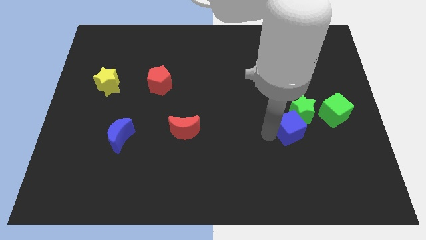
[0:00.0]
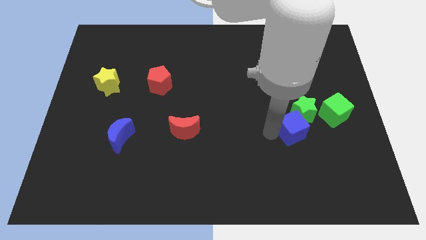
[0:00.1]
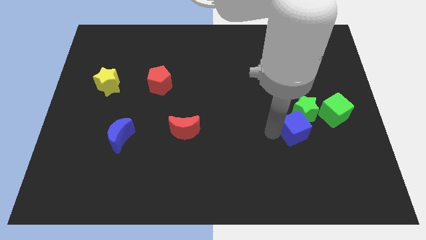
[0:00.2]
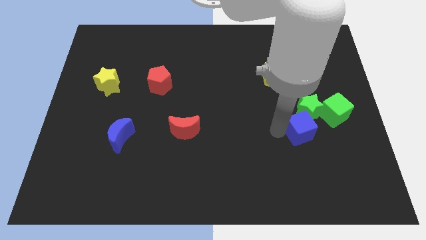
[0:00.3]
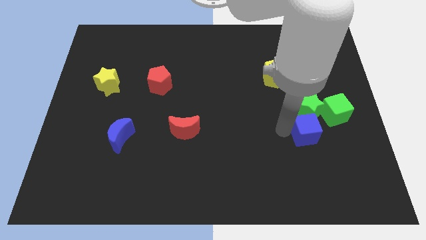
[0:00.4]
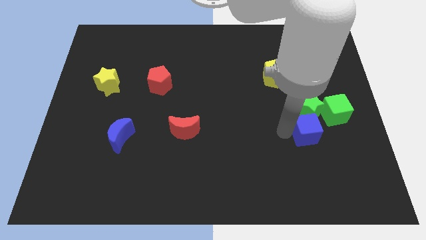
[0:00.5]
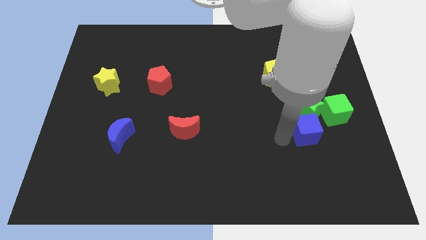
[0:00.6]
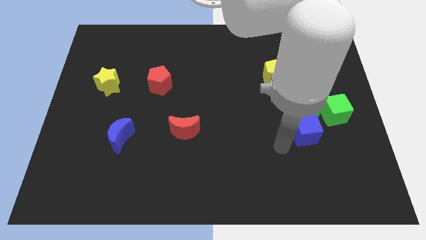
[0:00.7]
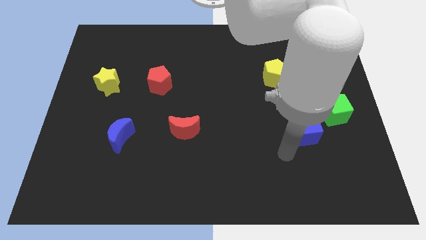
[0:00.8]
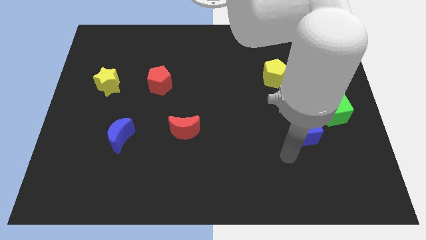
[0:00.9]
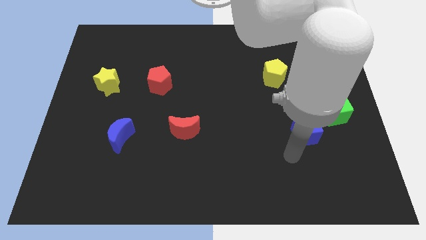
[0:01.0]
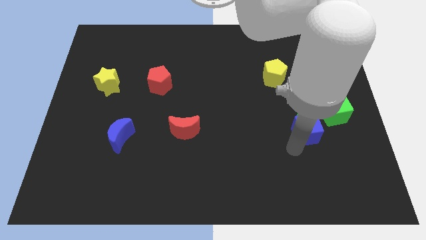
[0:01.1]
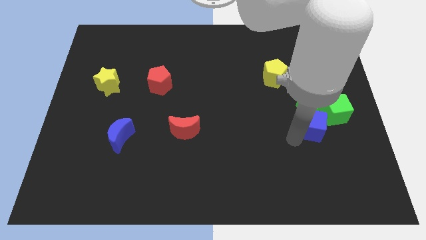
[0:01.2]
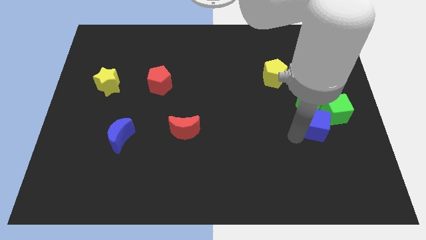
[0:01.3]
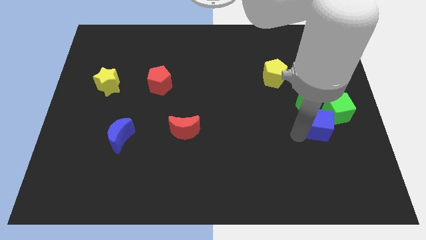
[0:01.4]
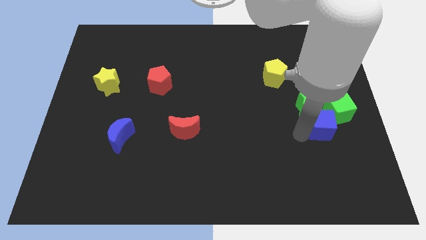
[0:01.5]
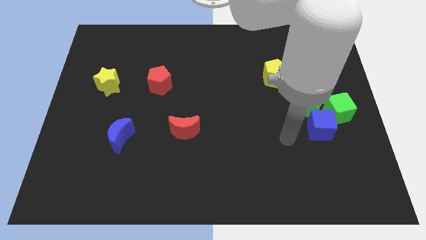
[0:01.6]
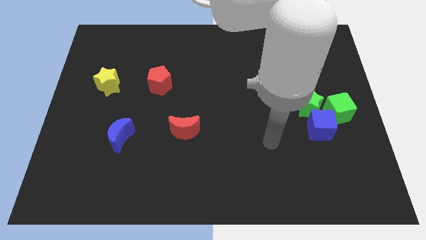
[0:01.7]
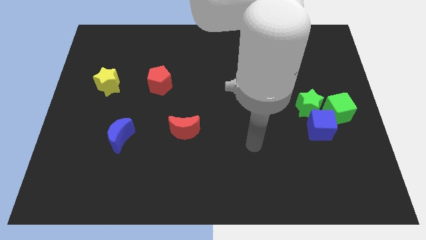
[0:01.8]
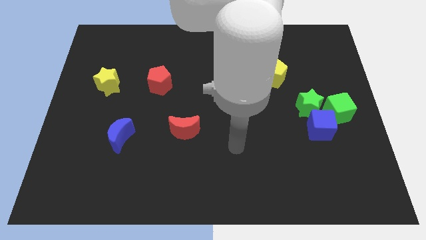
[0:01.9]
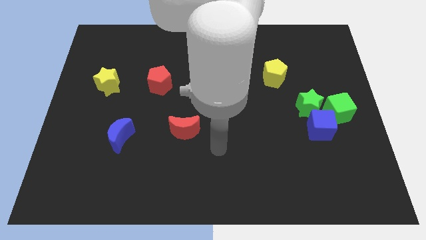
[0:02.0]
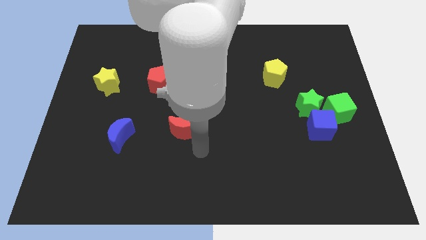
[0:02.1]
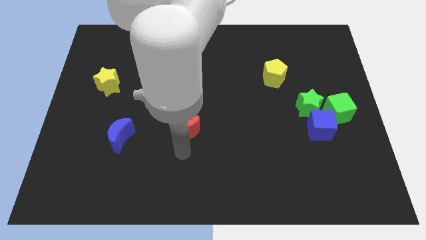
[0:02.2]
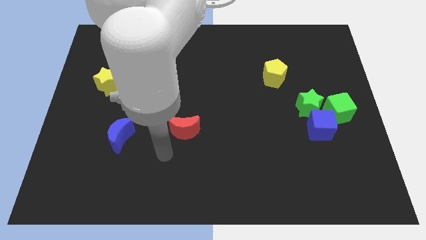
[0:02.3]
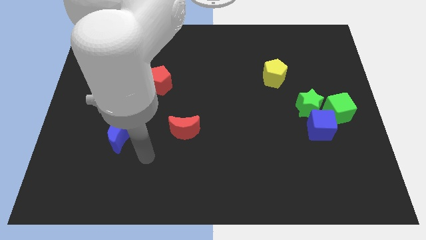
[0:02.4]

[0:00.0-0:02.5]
push the green star along with blue cube into the green cube

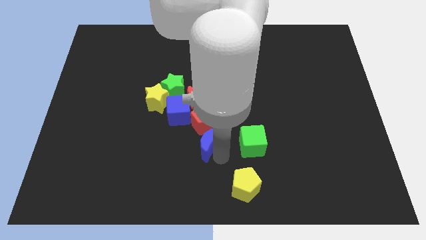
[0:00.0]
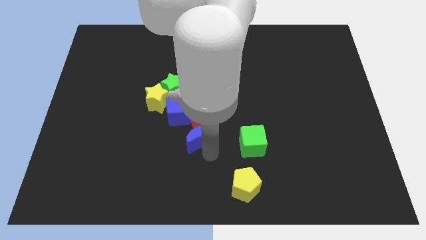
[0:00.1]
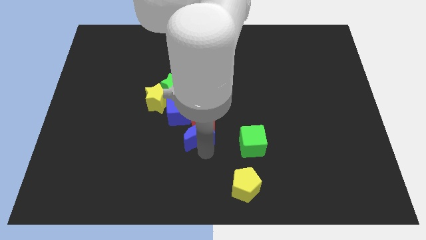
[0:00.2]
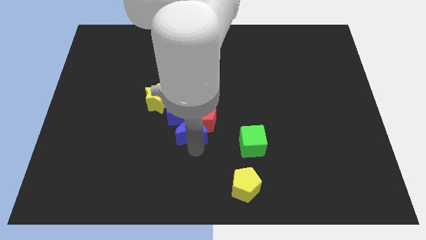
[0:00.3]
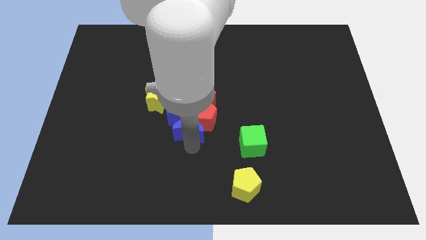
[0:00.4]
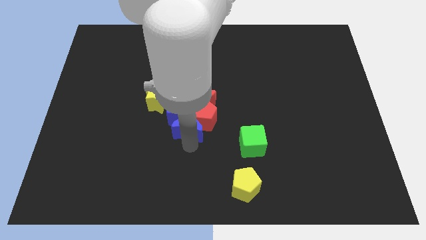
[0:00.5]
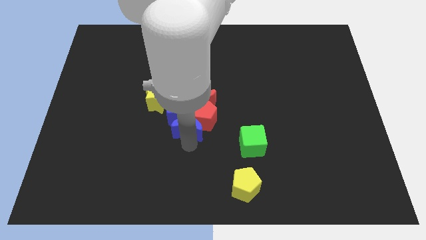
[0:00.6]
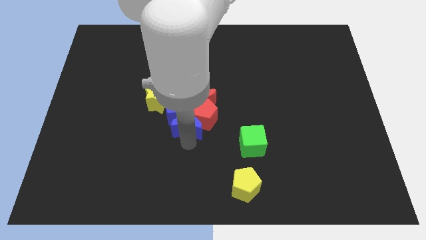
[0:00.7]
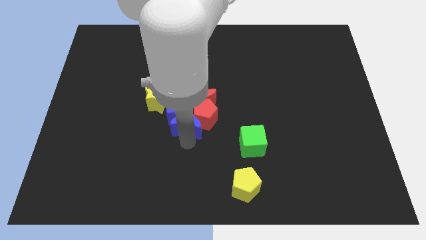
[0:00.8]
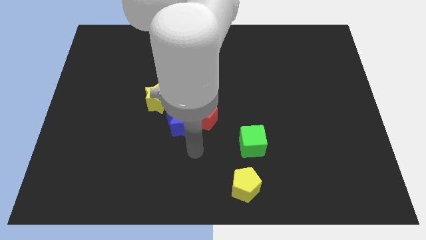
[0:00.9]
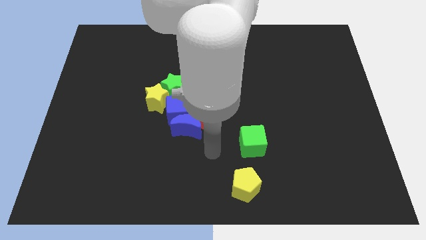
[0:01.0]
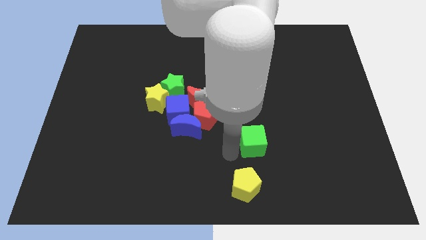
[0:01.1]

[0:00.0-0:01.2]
push the blue crescent into the blue cube

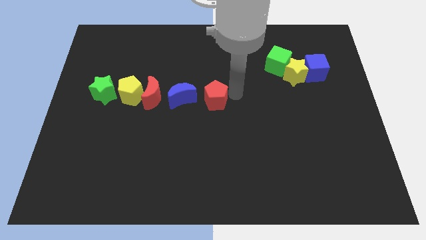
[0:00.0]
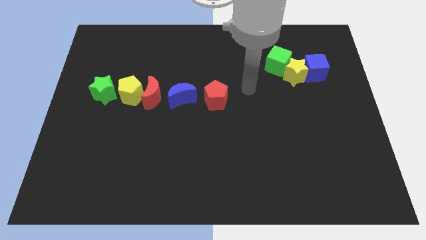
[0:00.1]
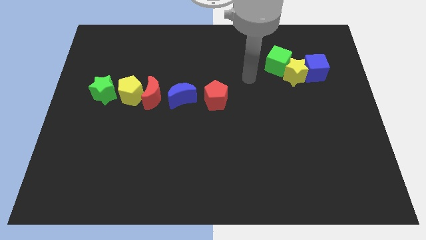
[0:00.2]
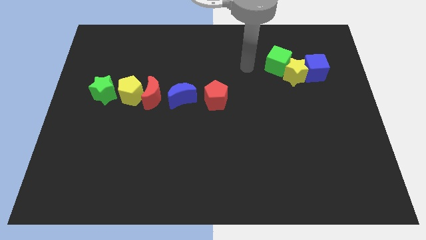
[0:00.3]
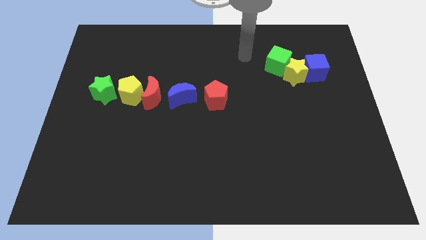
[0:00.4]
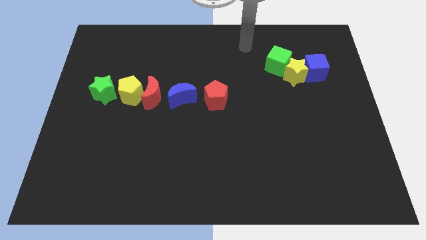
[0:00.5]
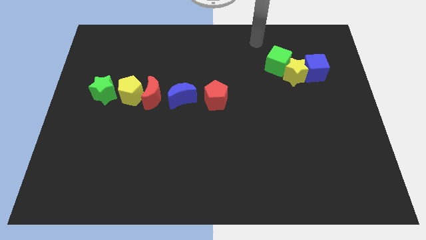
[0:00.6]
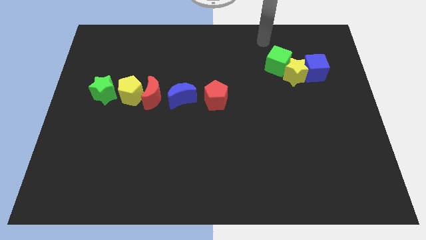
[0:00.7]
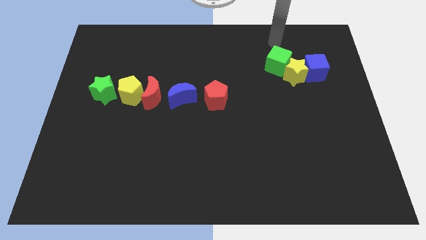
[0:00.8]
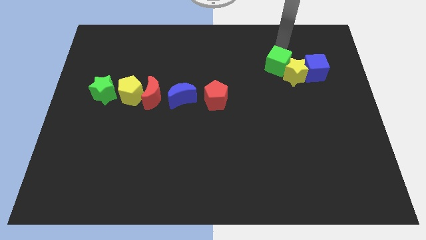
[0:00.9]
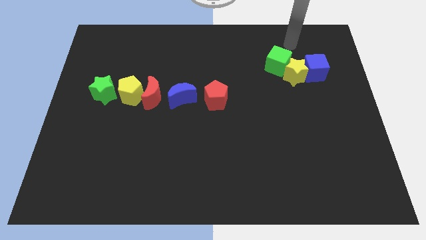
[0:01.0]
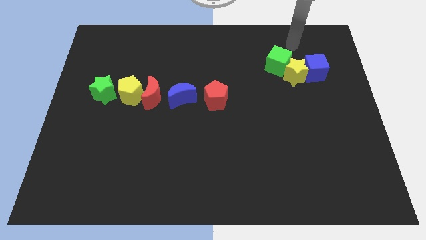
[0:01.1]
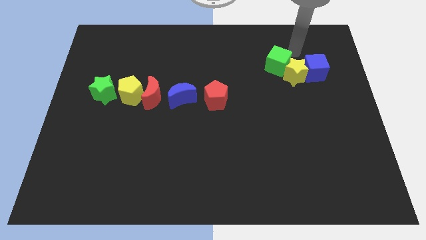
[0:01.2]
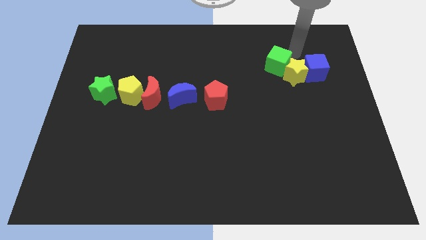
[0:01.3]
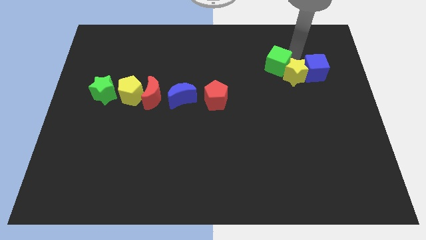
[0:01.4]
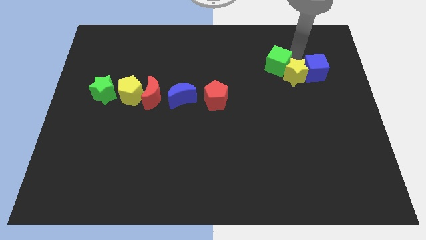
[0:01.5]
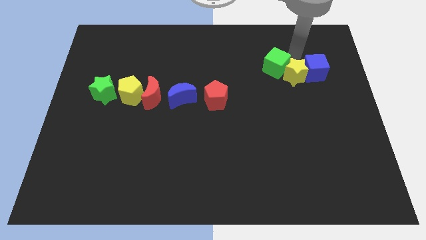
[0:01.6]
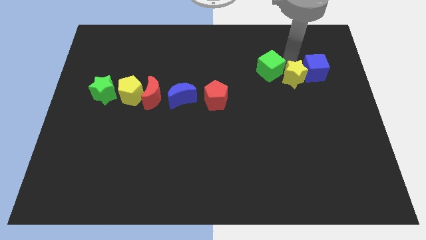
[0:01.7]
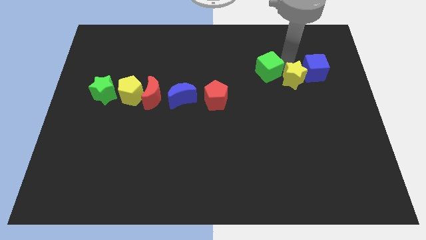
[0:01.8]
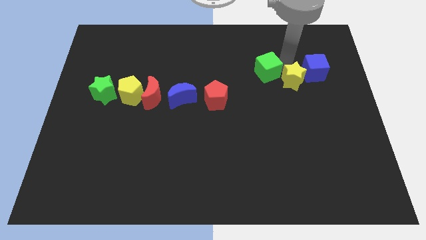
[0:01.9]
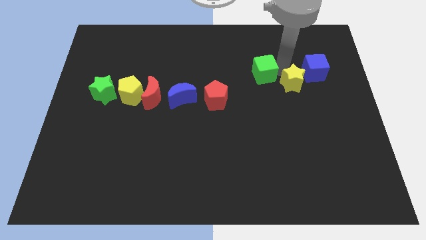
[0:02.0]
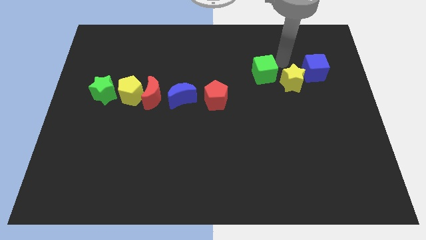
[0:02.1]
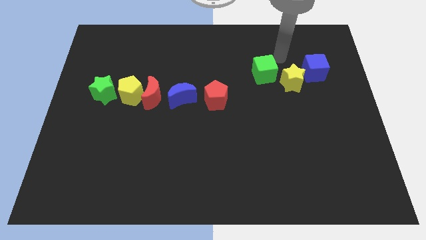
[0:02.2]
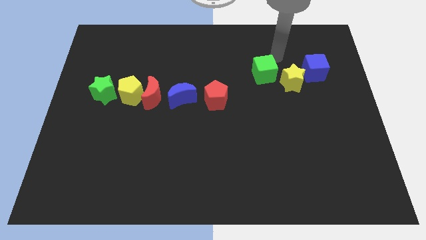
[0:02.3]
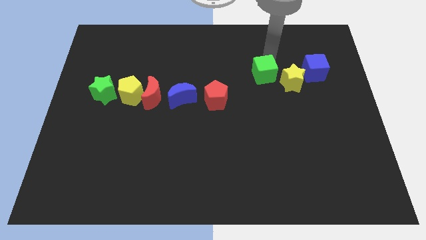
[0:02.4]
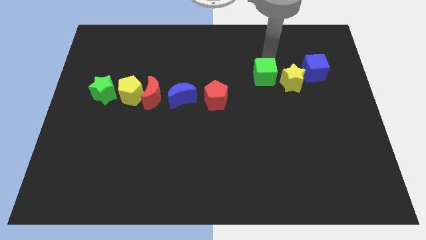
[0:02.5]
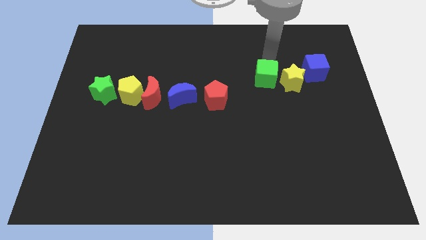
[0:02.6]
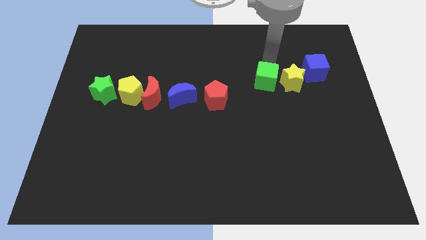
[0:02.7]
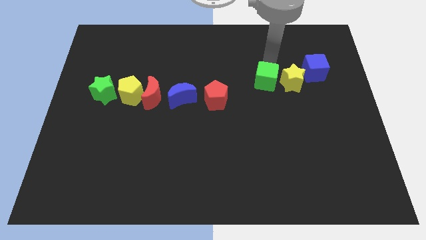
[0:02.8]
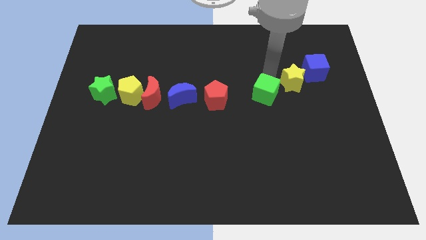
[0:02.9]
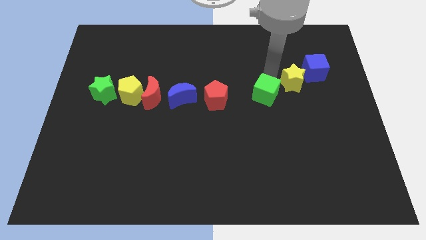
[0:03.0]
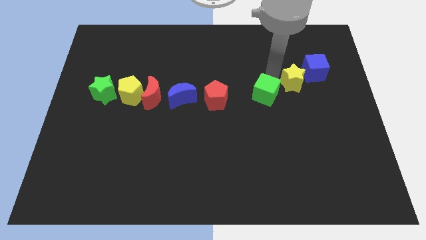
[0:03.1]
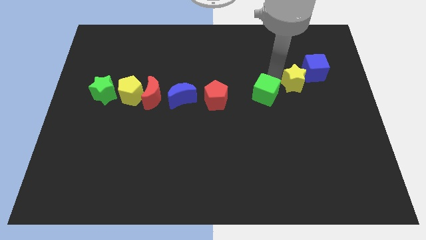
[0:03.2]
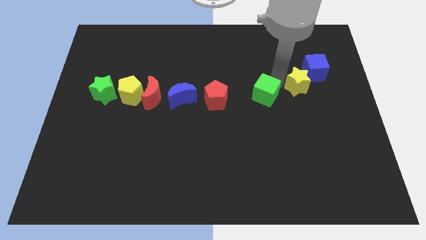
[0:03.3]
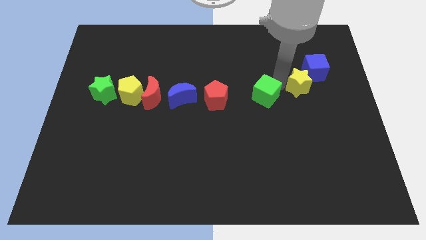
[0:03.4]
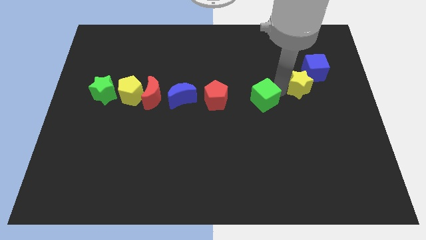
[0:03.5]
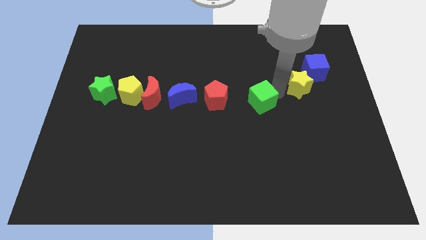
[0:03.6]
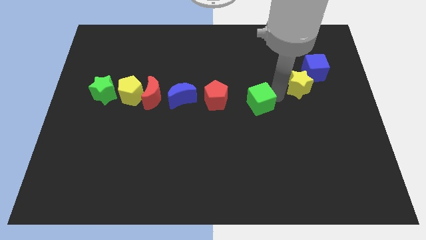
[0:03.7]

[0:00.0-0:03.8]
move the green cube to the right of the red pentagon

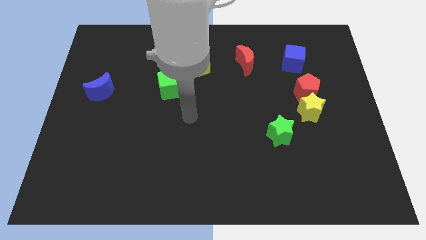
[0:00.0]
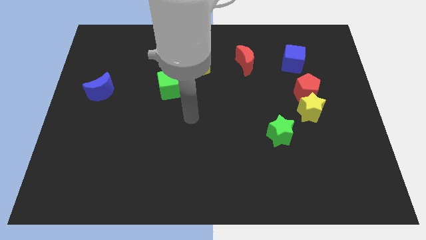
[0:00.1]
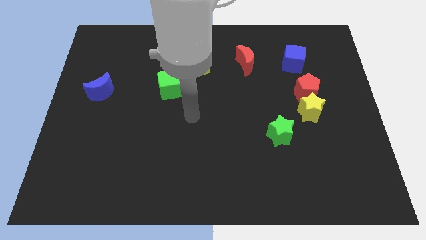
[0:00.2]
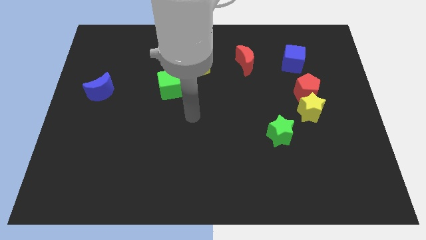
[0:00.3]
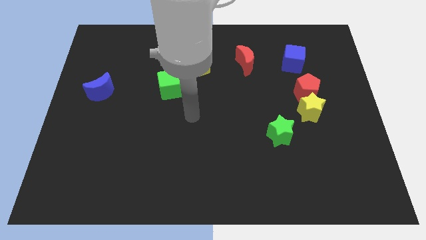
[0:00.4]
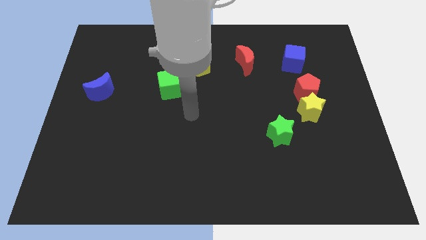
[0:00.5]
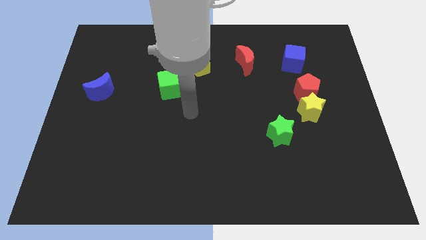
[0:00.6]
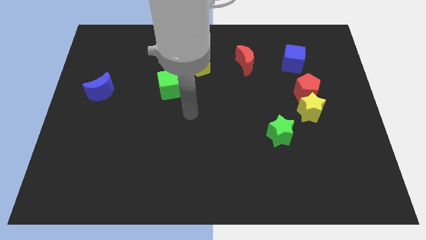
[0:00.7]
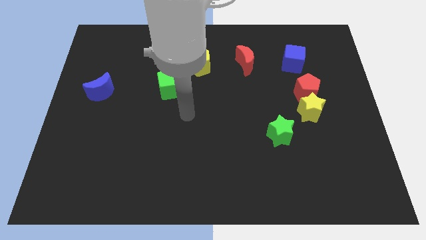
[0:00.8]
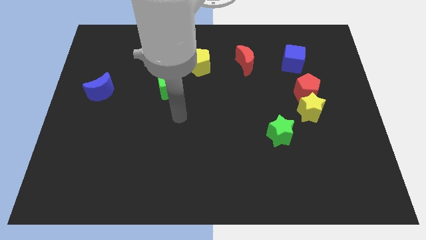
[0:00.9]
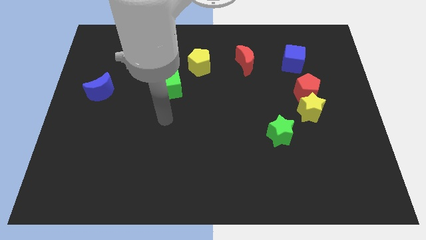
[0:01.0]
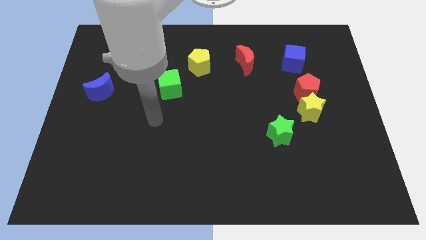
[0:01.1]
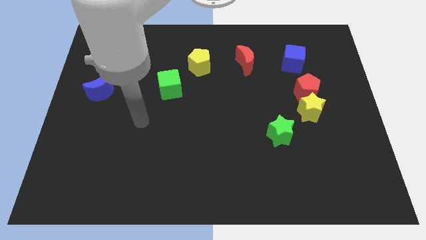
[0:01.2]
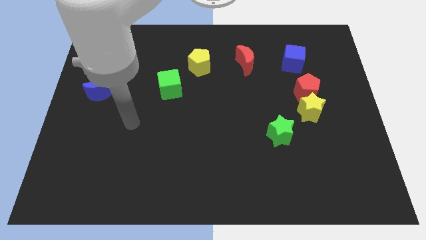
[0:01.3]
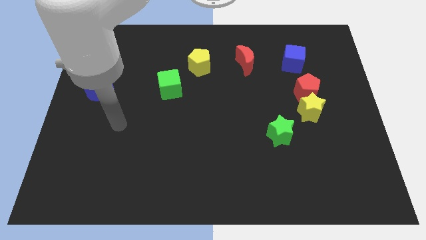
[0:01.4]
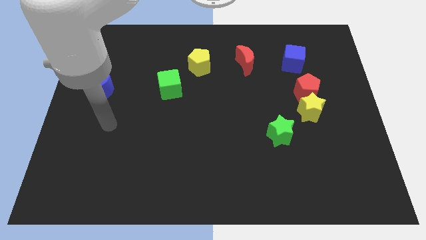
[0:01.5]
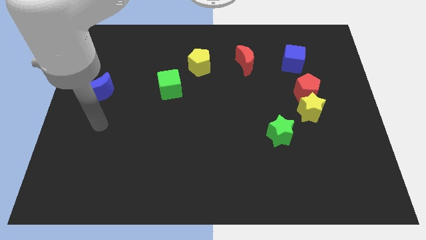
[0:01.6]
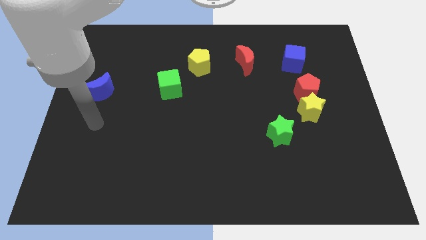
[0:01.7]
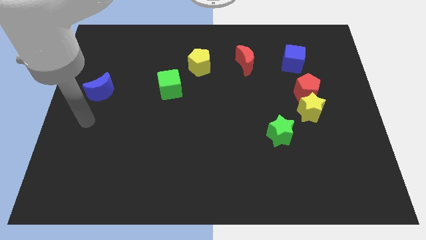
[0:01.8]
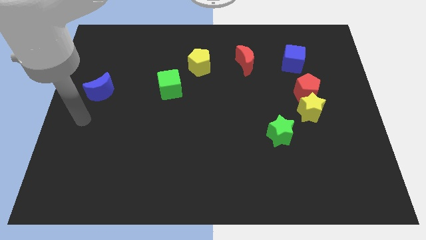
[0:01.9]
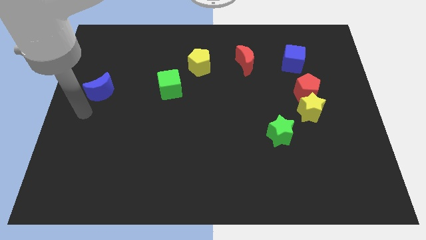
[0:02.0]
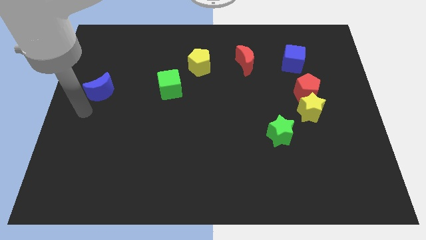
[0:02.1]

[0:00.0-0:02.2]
point the arm below the blue moon
